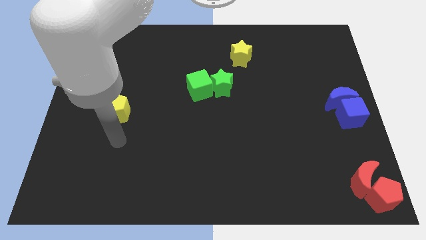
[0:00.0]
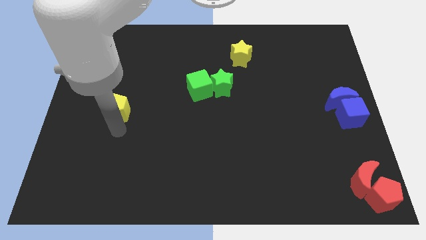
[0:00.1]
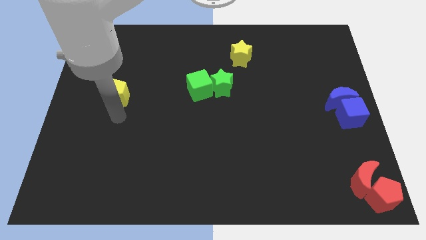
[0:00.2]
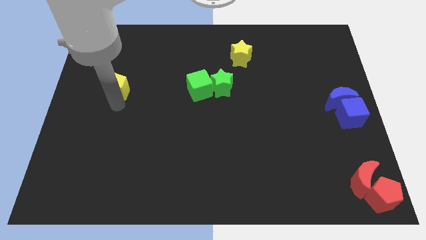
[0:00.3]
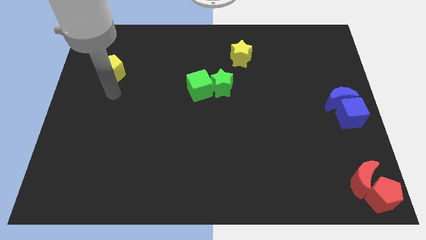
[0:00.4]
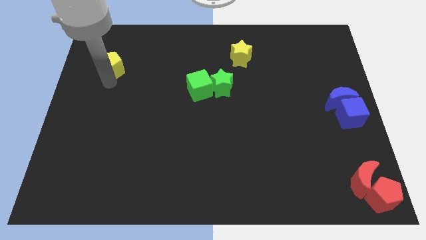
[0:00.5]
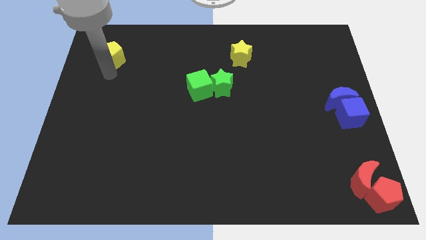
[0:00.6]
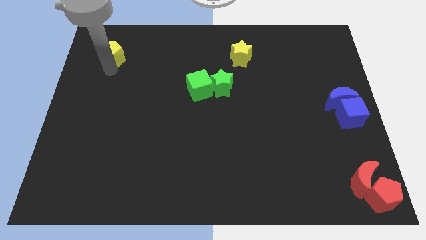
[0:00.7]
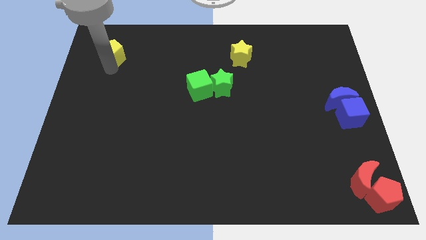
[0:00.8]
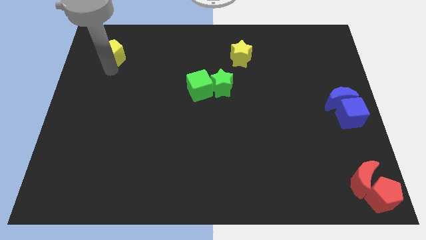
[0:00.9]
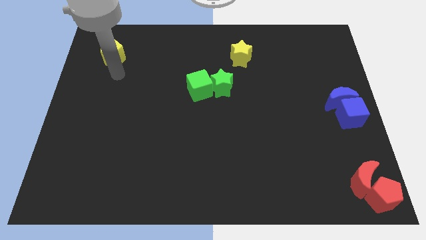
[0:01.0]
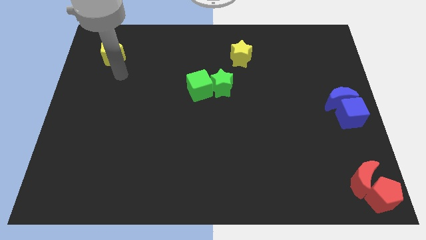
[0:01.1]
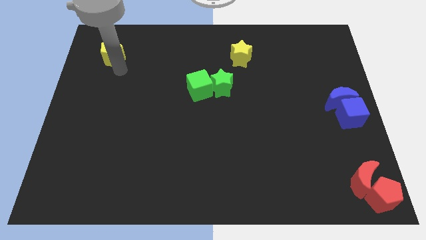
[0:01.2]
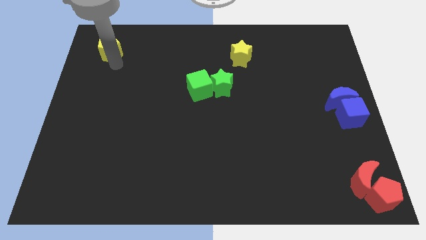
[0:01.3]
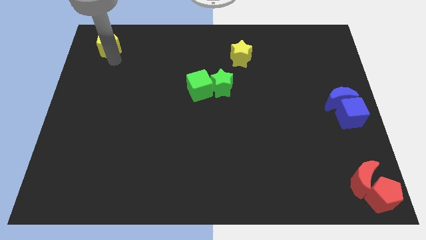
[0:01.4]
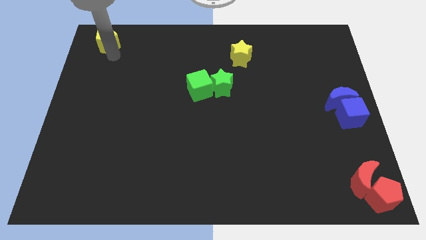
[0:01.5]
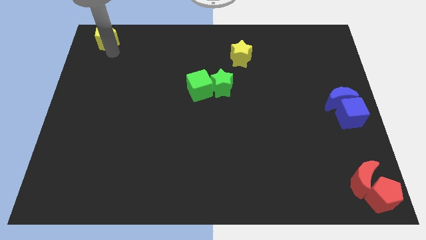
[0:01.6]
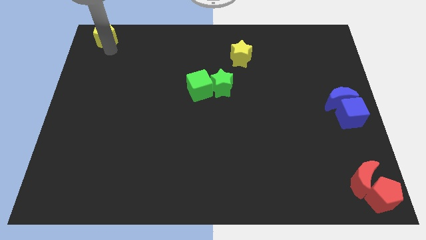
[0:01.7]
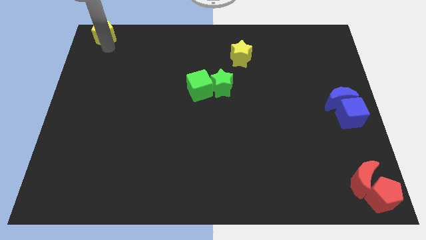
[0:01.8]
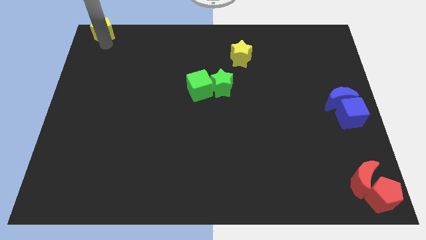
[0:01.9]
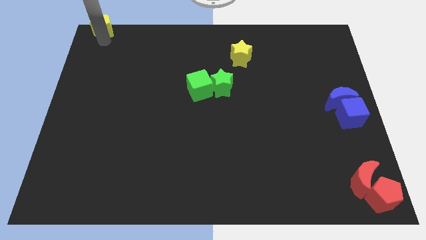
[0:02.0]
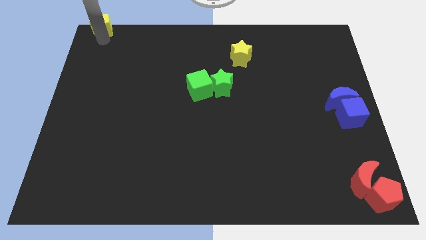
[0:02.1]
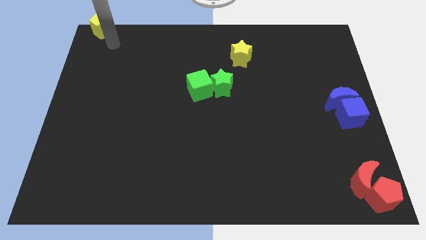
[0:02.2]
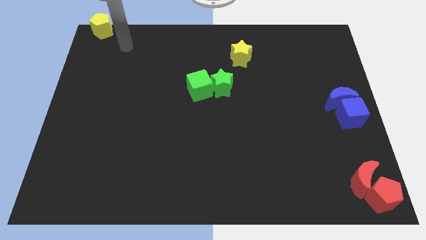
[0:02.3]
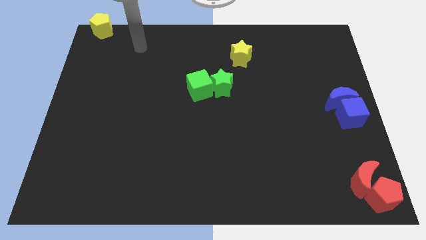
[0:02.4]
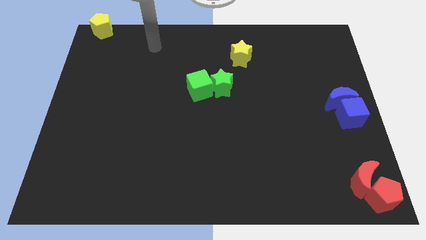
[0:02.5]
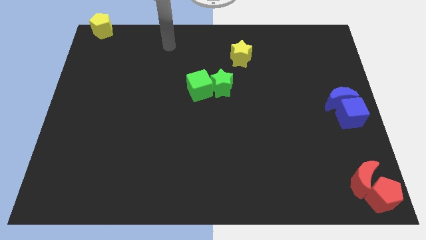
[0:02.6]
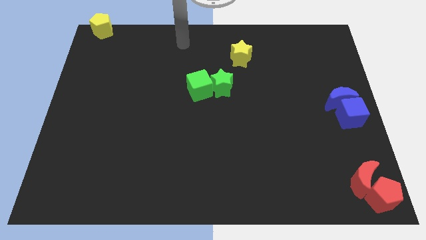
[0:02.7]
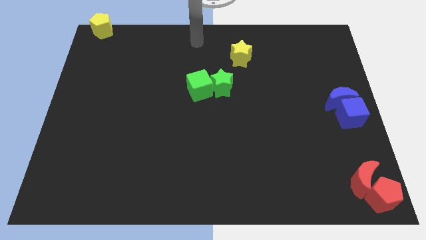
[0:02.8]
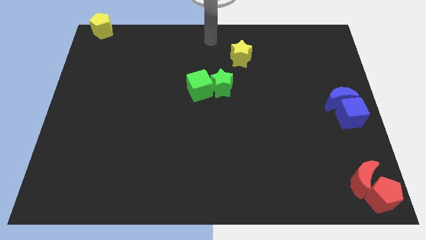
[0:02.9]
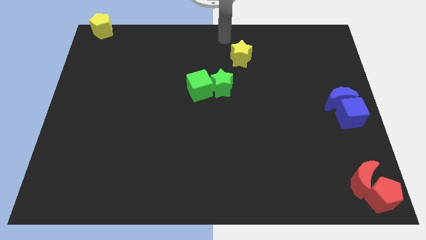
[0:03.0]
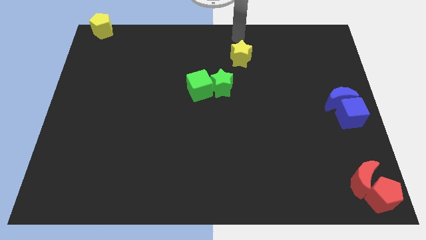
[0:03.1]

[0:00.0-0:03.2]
put the yellow pentagon to the top left corner of the board

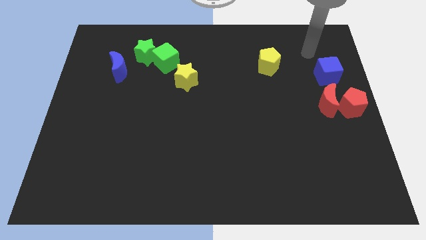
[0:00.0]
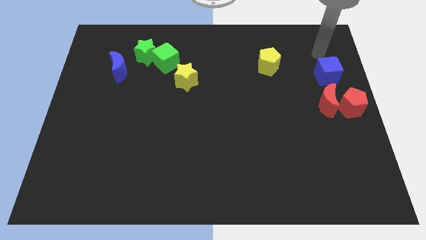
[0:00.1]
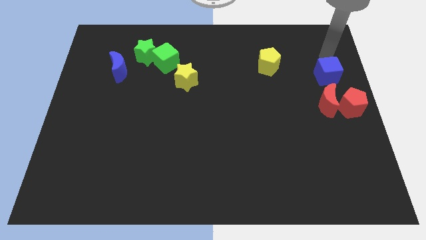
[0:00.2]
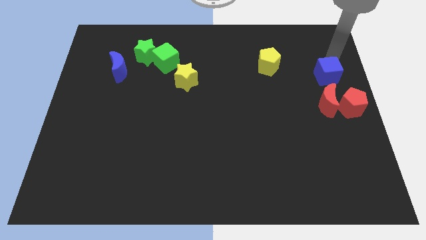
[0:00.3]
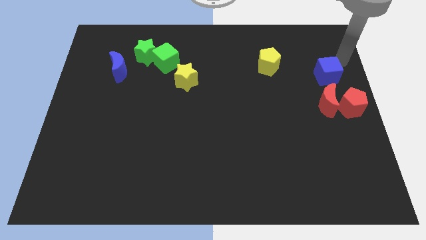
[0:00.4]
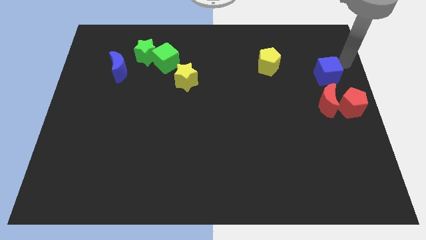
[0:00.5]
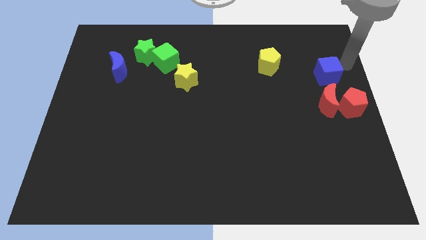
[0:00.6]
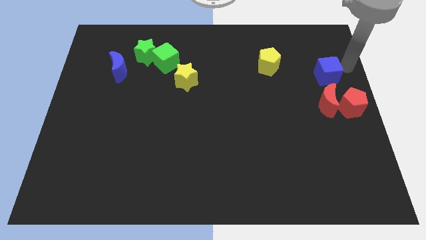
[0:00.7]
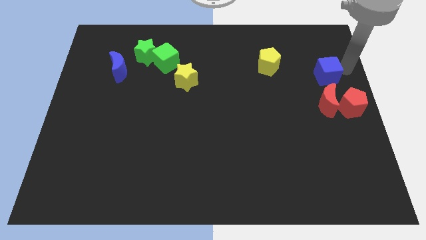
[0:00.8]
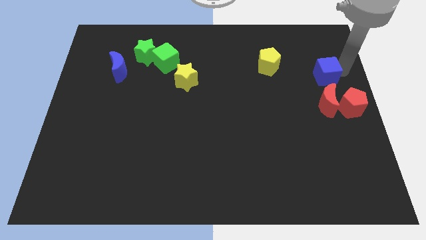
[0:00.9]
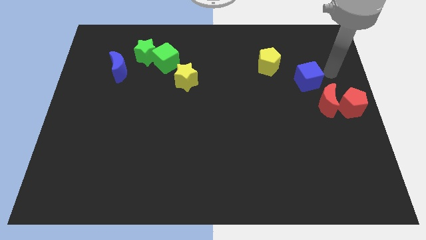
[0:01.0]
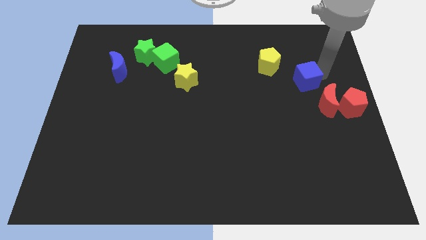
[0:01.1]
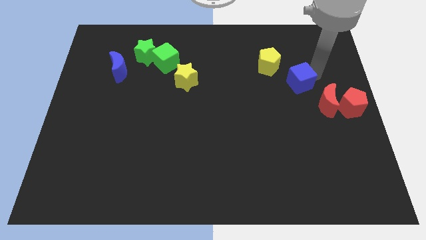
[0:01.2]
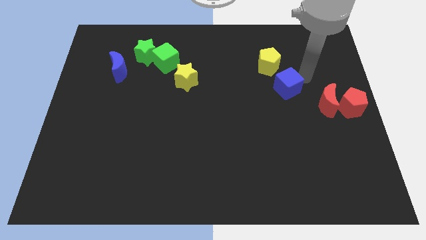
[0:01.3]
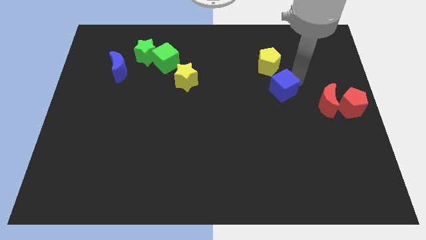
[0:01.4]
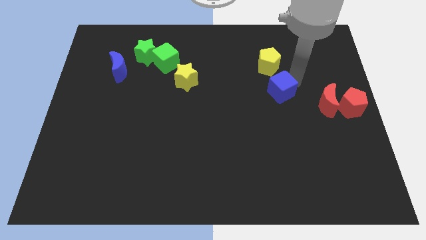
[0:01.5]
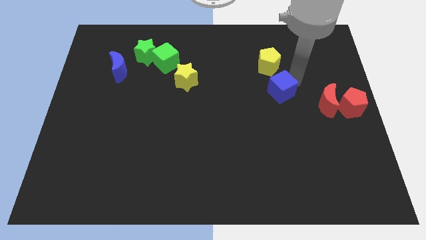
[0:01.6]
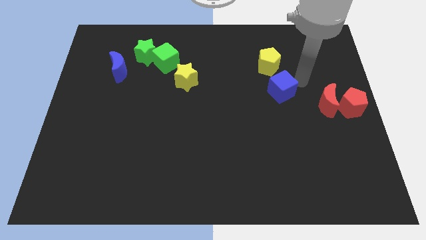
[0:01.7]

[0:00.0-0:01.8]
place blue cube below yellow pentagon

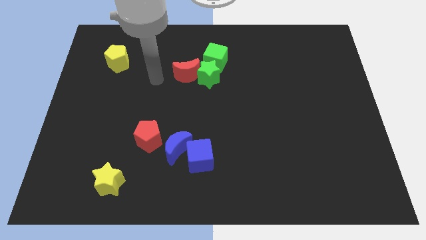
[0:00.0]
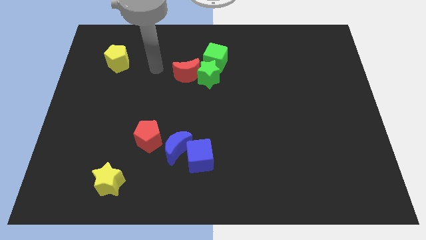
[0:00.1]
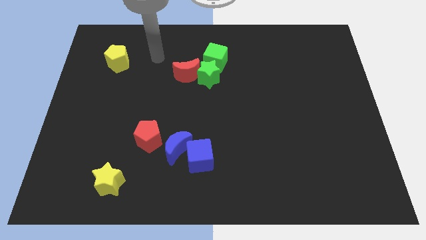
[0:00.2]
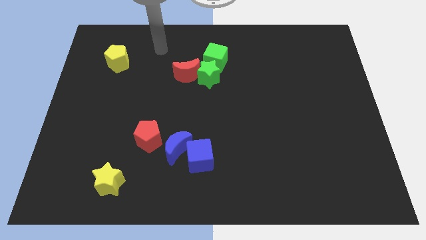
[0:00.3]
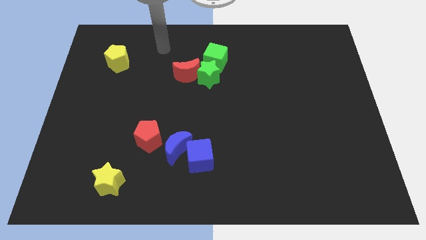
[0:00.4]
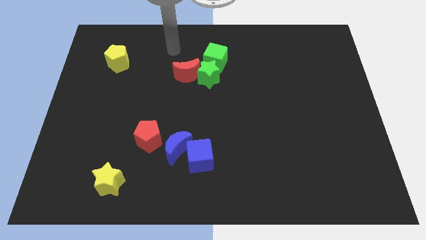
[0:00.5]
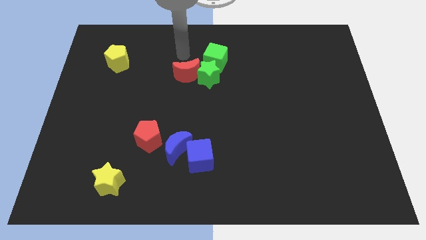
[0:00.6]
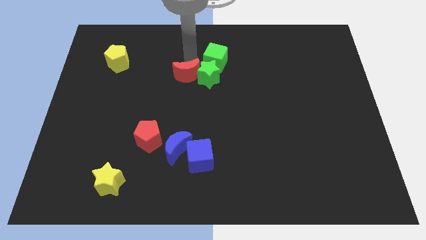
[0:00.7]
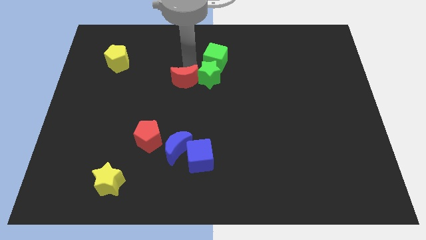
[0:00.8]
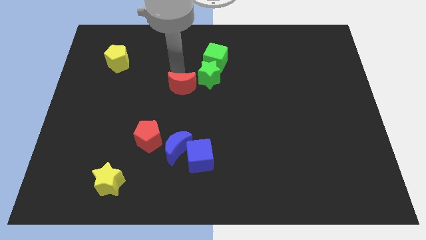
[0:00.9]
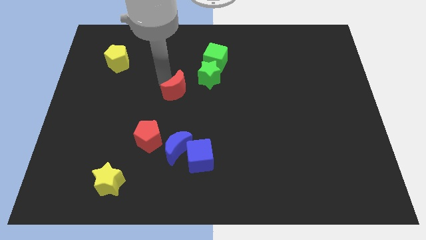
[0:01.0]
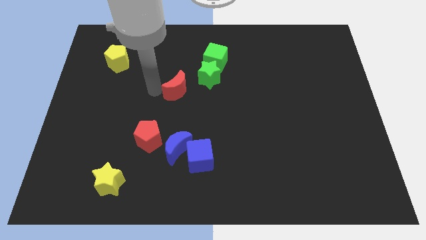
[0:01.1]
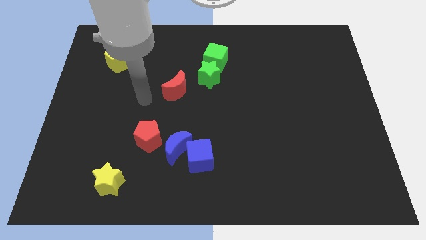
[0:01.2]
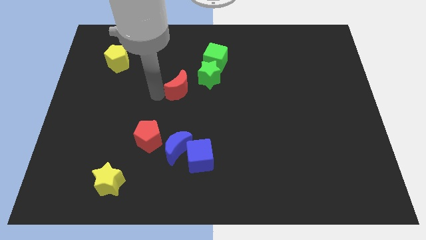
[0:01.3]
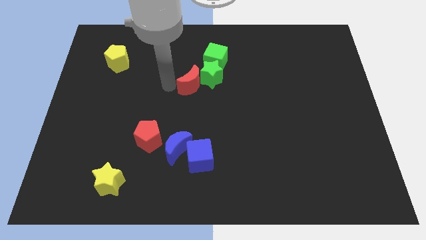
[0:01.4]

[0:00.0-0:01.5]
move the red crescent diagonally to the bottom left of the green star

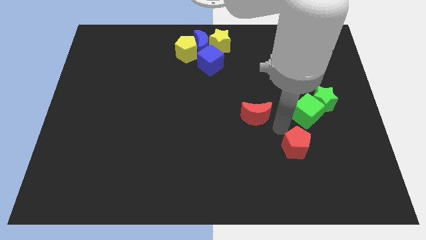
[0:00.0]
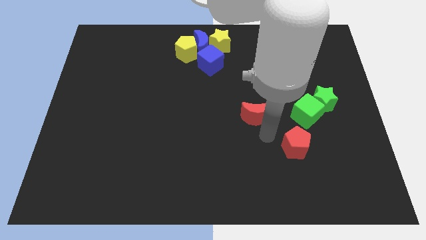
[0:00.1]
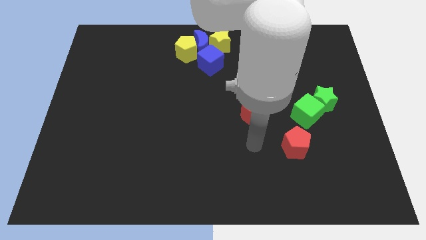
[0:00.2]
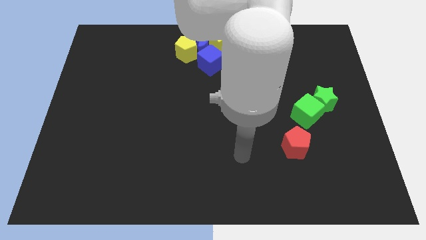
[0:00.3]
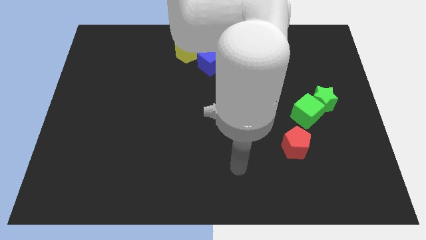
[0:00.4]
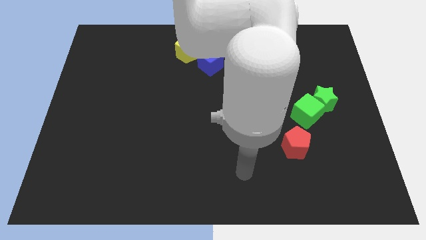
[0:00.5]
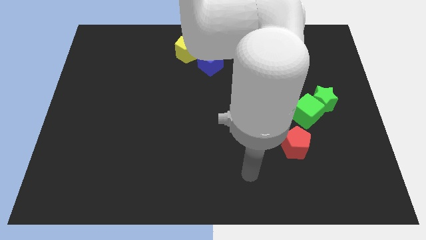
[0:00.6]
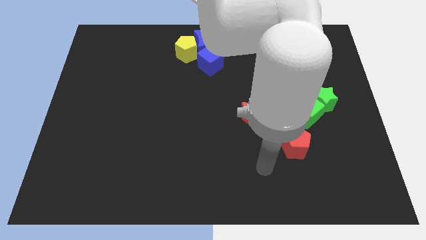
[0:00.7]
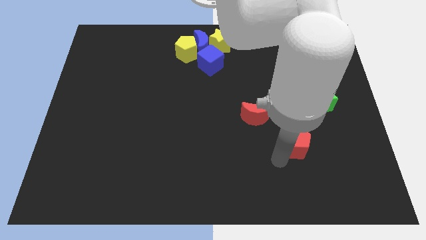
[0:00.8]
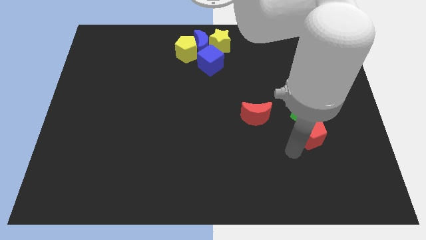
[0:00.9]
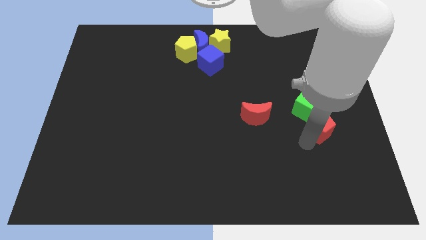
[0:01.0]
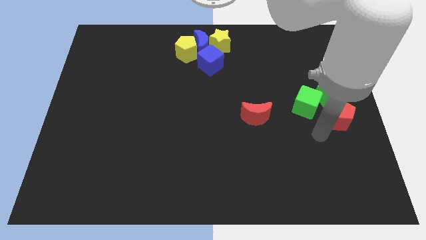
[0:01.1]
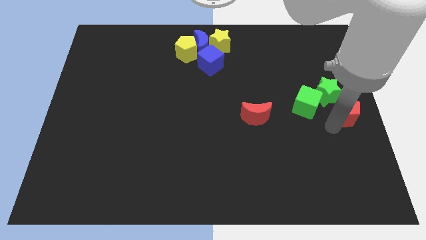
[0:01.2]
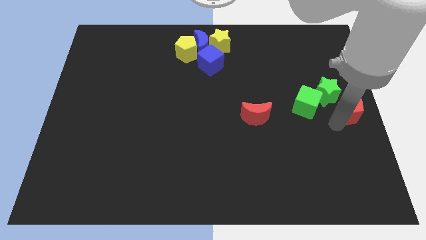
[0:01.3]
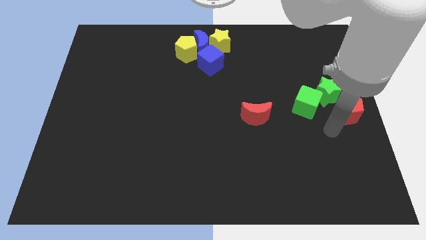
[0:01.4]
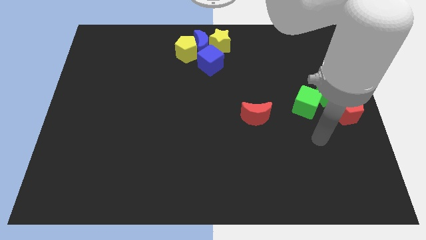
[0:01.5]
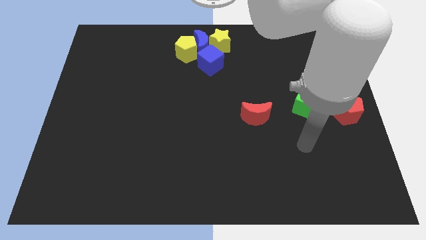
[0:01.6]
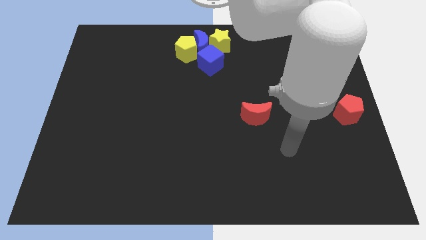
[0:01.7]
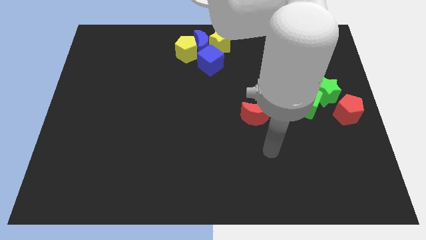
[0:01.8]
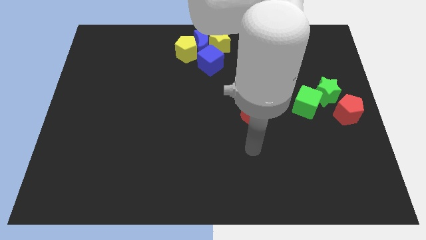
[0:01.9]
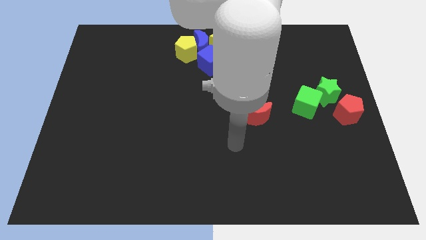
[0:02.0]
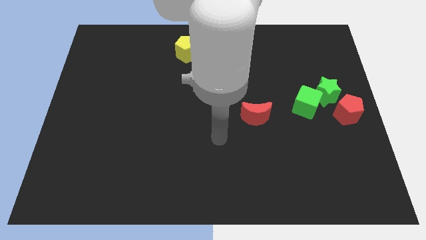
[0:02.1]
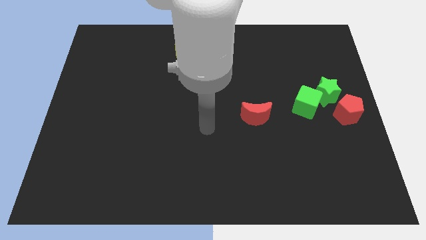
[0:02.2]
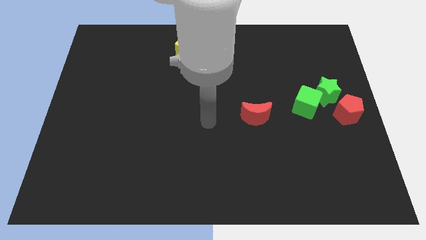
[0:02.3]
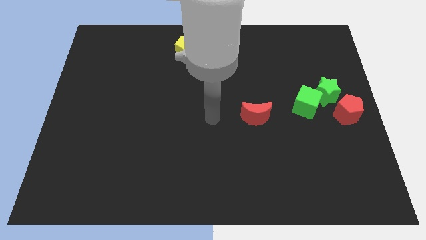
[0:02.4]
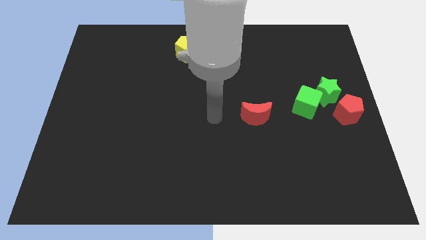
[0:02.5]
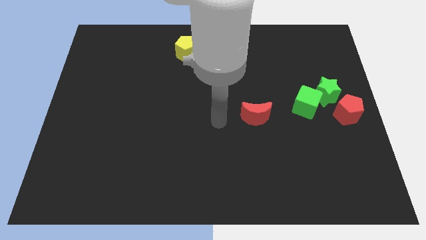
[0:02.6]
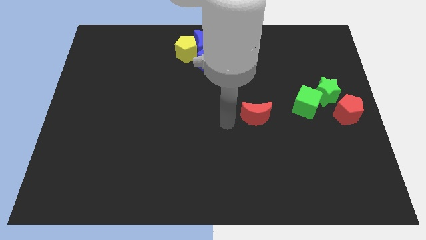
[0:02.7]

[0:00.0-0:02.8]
place the red pentagon bottom right side of the green star
